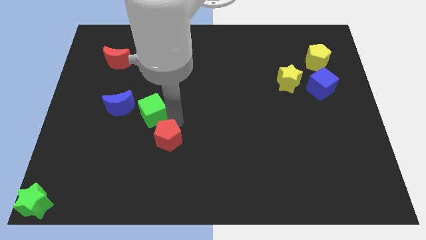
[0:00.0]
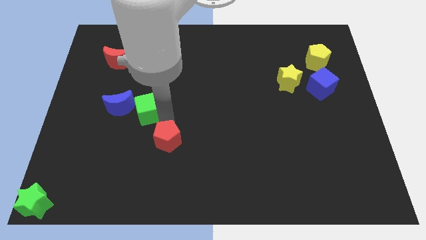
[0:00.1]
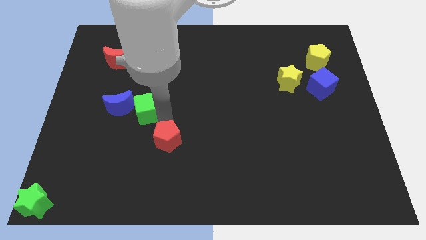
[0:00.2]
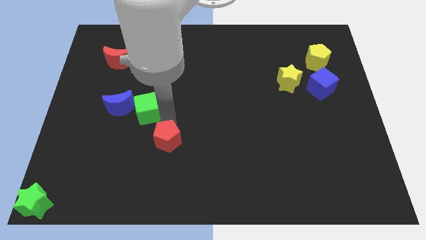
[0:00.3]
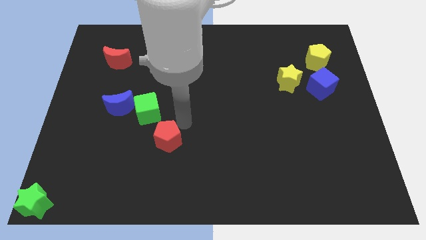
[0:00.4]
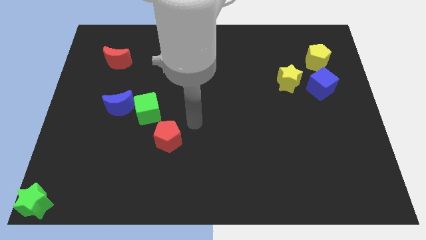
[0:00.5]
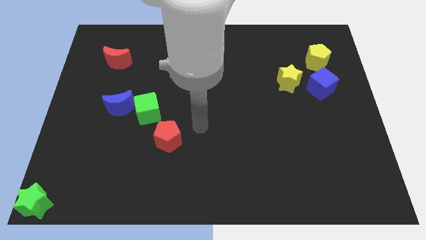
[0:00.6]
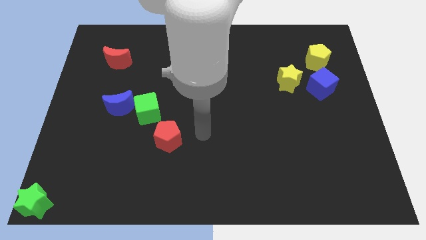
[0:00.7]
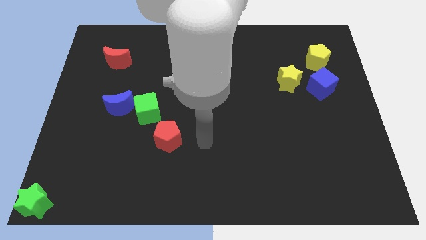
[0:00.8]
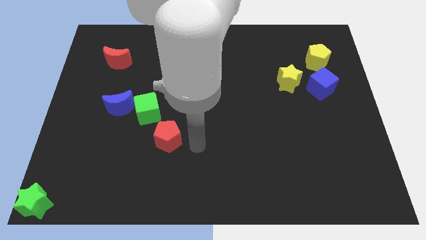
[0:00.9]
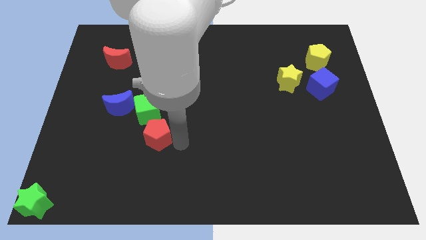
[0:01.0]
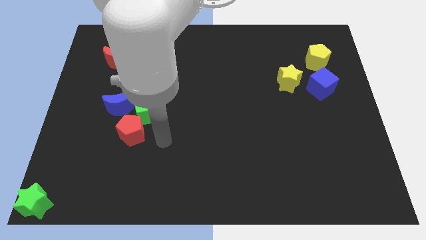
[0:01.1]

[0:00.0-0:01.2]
move the green cube into the blue crescent

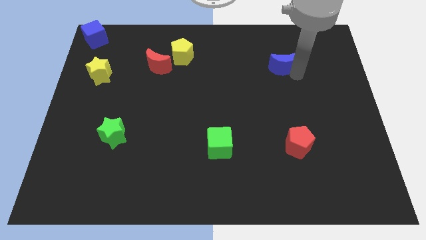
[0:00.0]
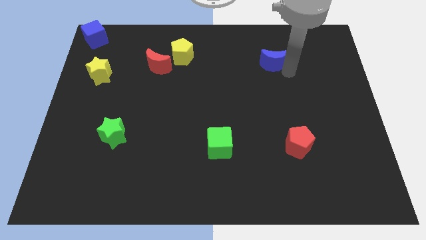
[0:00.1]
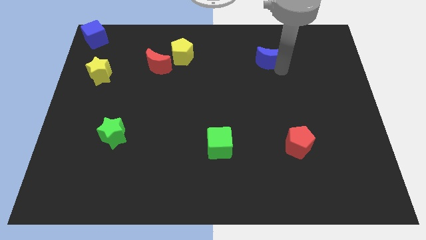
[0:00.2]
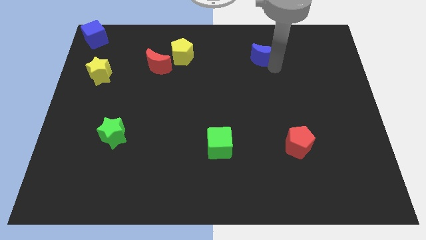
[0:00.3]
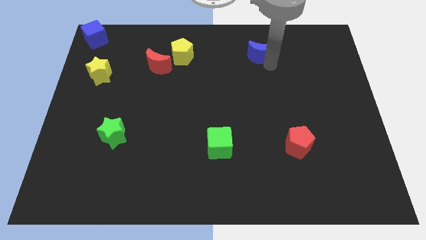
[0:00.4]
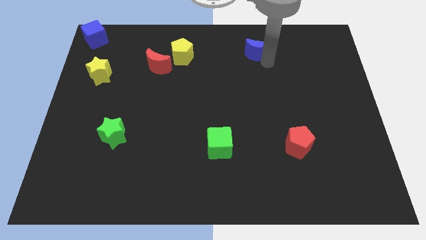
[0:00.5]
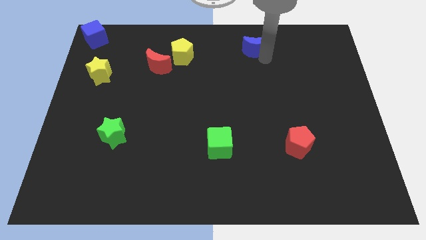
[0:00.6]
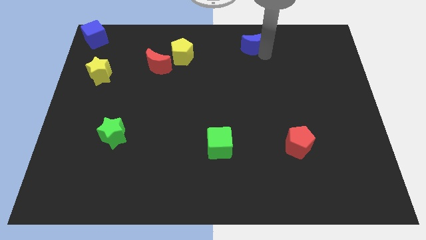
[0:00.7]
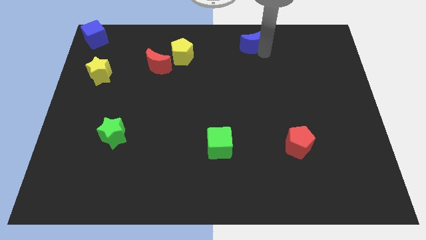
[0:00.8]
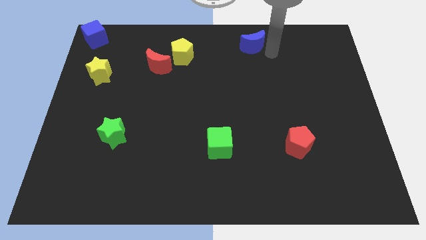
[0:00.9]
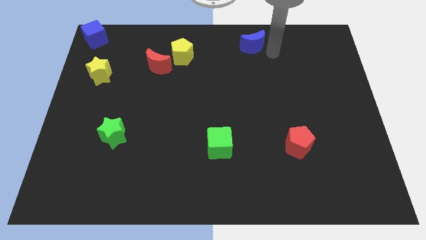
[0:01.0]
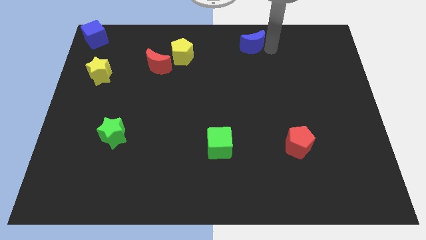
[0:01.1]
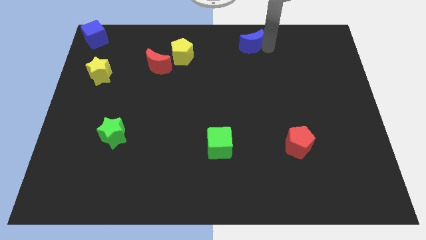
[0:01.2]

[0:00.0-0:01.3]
push the blue moon to the top of the board

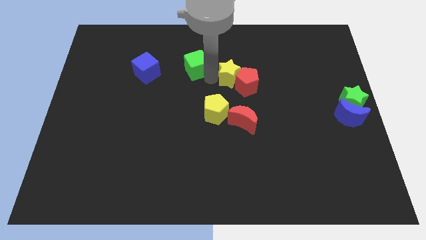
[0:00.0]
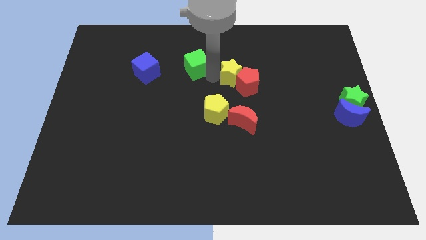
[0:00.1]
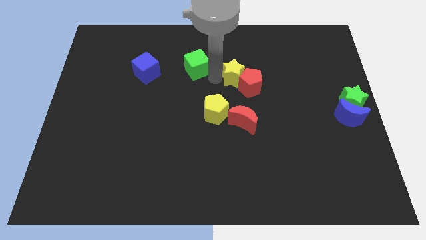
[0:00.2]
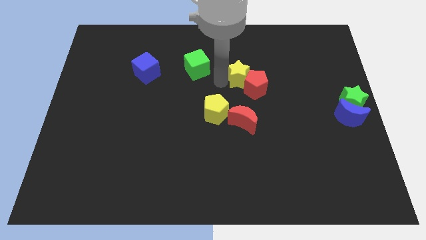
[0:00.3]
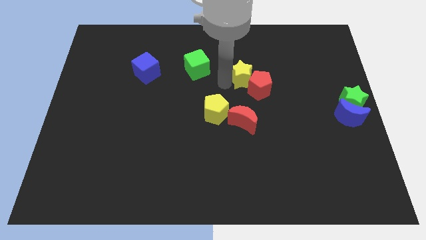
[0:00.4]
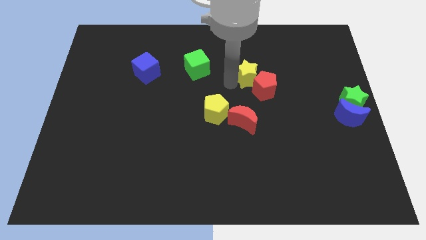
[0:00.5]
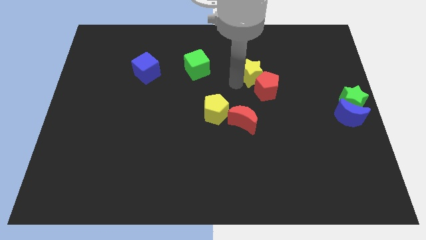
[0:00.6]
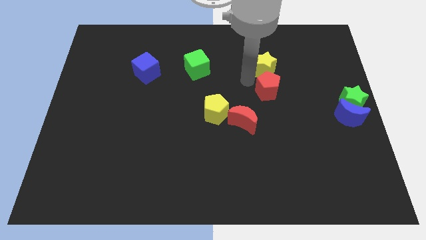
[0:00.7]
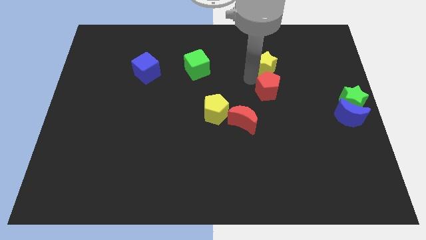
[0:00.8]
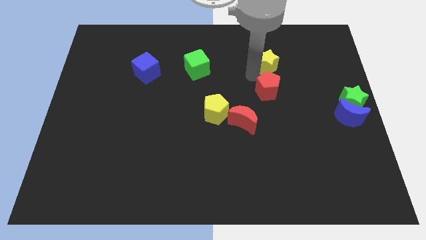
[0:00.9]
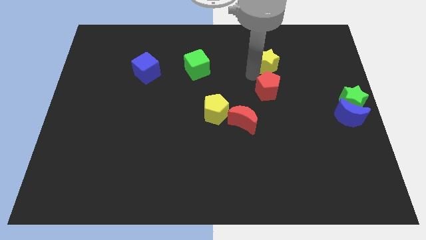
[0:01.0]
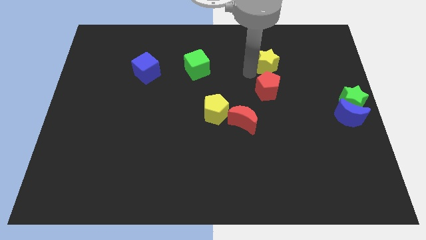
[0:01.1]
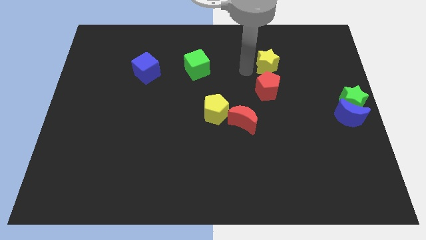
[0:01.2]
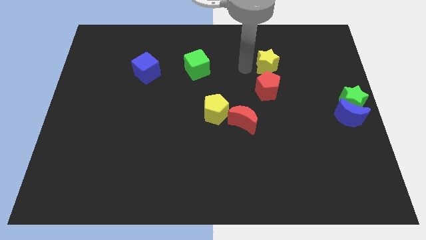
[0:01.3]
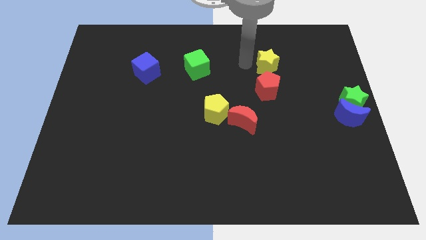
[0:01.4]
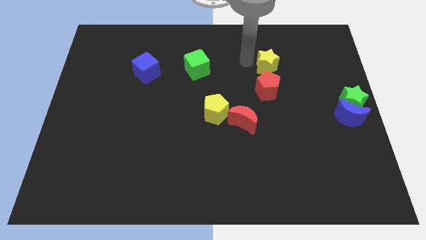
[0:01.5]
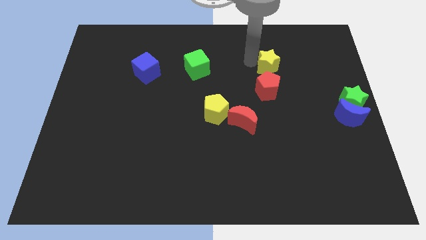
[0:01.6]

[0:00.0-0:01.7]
adjust the yellow star vertically above the red pentagon

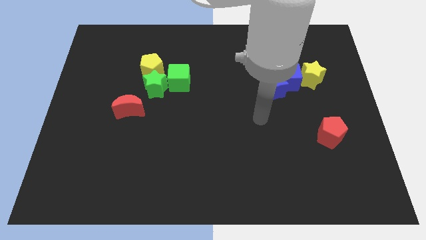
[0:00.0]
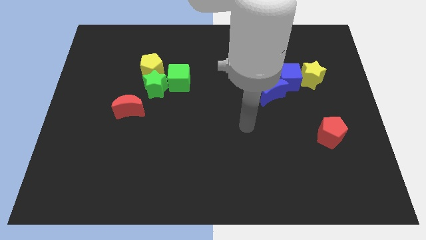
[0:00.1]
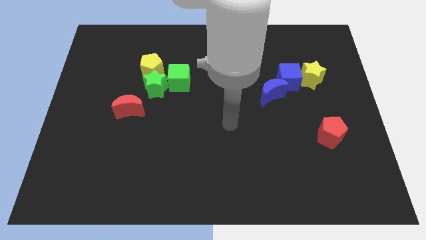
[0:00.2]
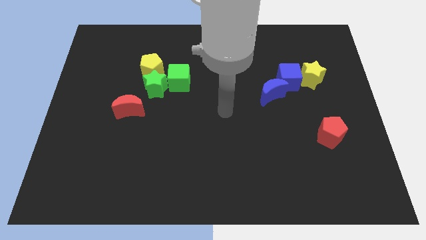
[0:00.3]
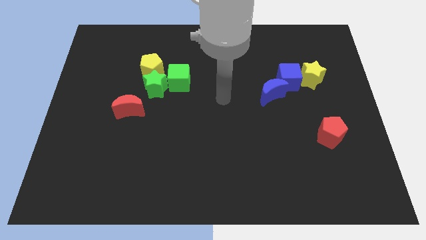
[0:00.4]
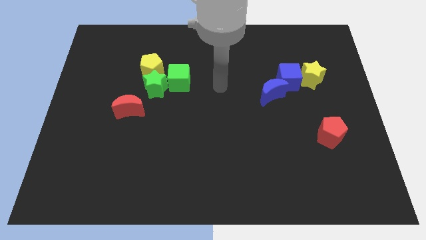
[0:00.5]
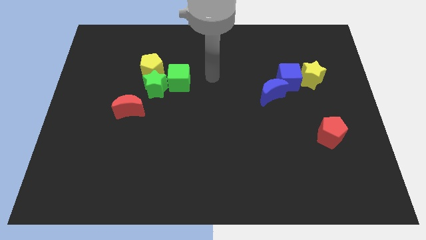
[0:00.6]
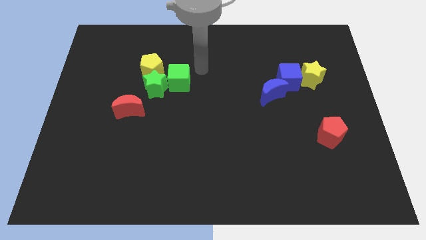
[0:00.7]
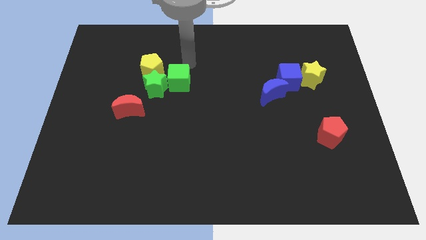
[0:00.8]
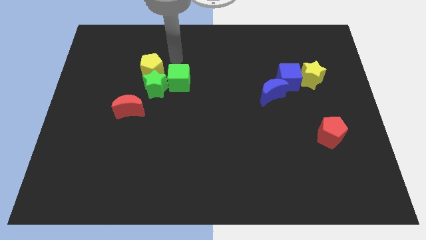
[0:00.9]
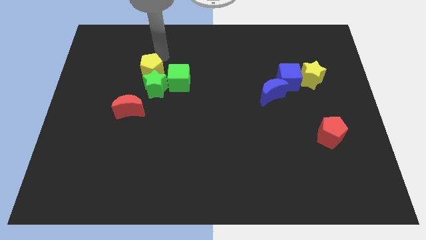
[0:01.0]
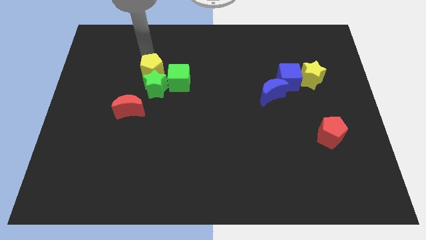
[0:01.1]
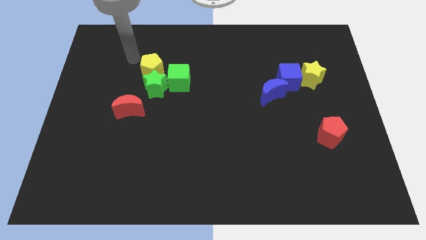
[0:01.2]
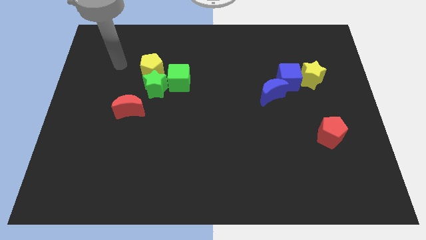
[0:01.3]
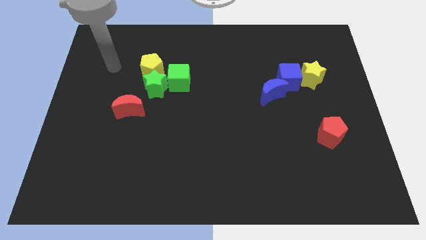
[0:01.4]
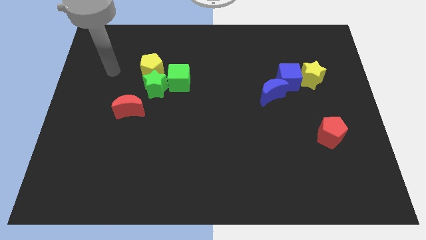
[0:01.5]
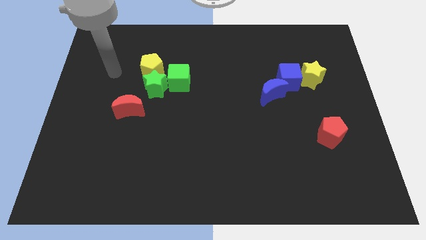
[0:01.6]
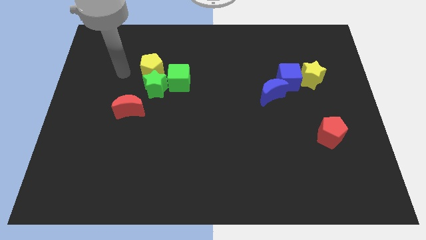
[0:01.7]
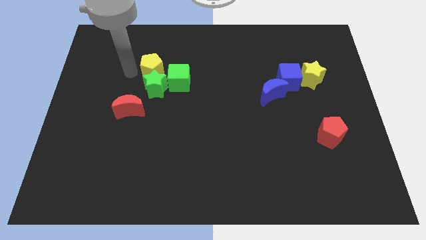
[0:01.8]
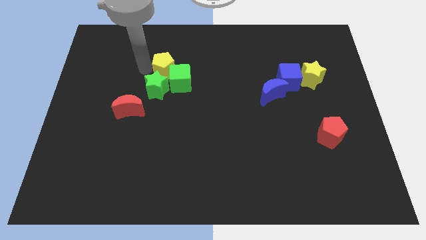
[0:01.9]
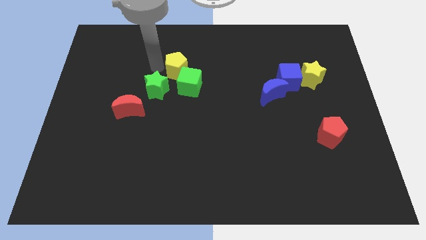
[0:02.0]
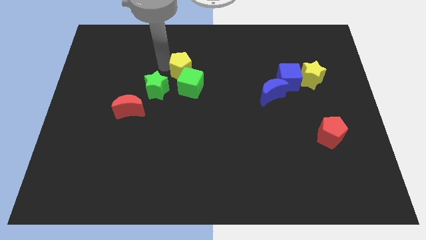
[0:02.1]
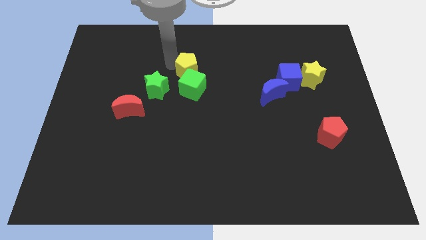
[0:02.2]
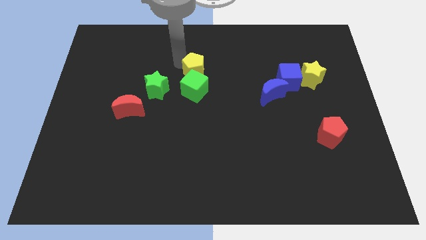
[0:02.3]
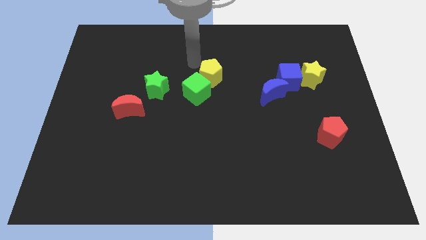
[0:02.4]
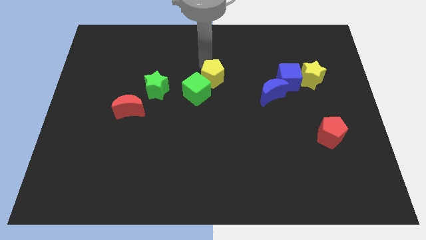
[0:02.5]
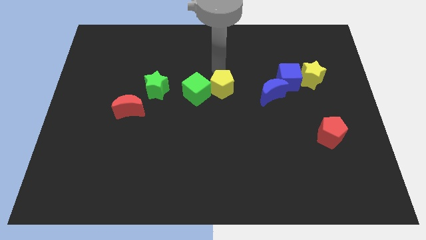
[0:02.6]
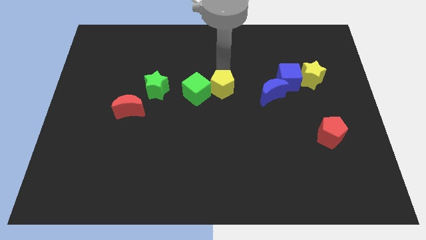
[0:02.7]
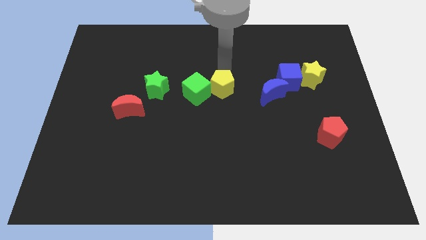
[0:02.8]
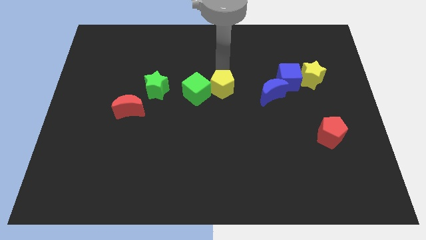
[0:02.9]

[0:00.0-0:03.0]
push the yellow pentagon and green cube towards the center of the board

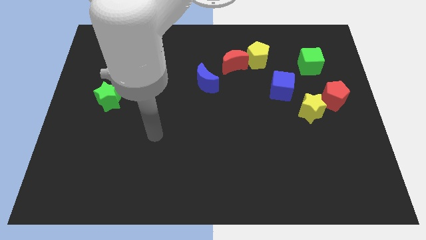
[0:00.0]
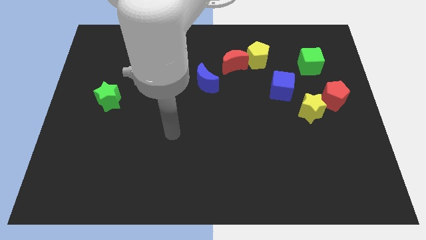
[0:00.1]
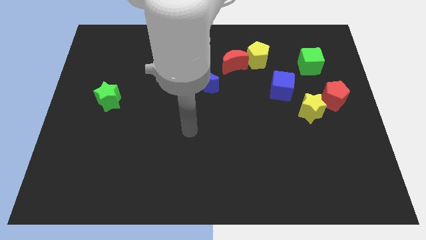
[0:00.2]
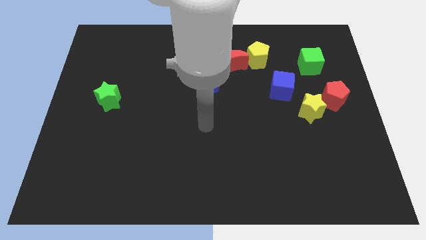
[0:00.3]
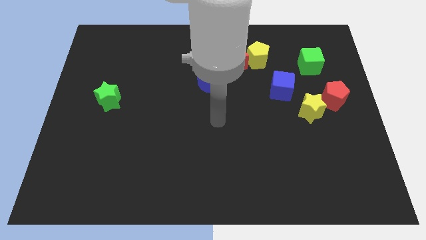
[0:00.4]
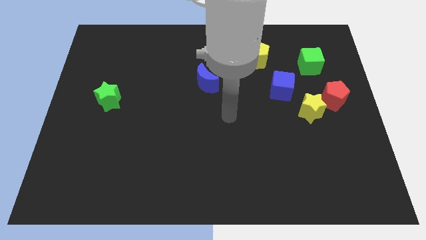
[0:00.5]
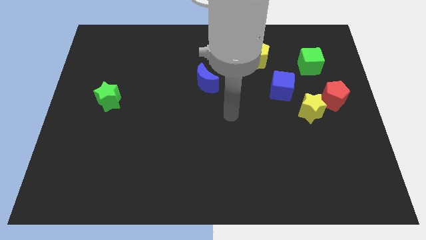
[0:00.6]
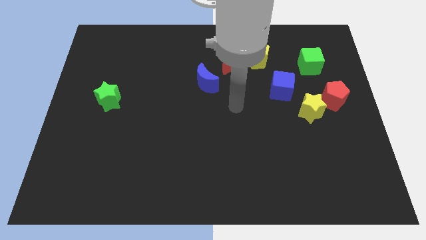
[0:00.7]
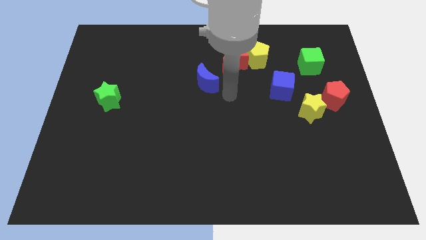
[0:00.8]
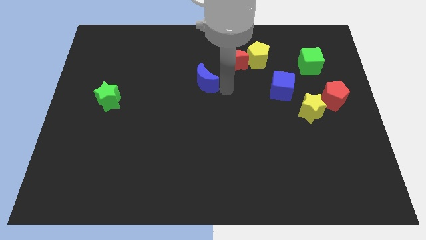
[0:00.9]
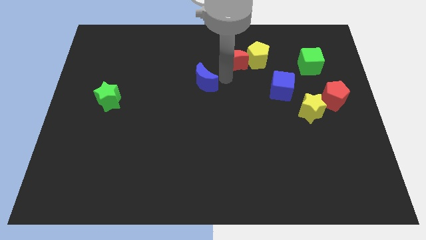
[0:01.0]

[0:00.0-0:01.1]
move your hand to the right of blue moon

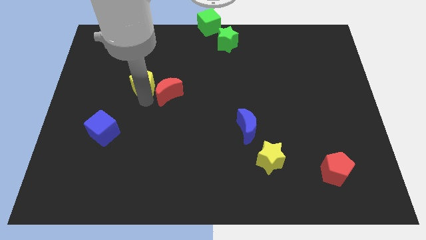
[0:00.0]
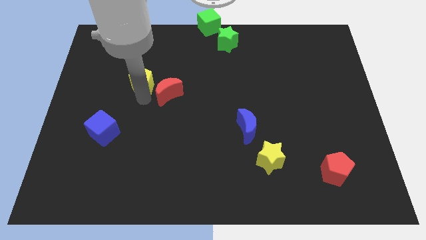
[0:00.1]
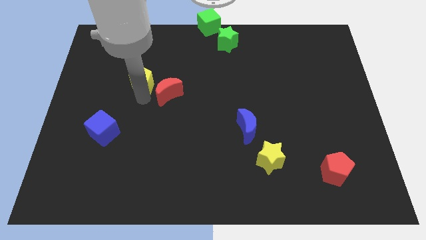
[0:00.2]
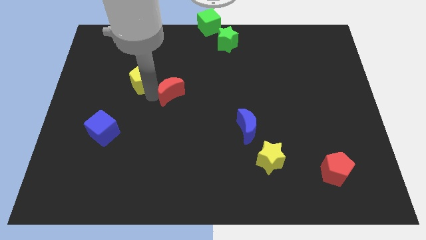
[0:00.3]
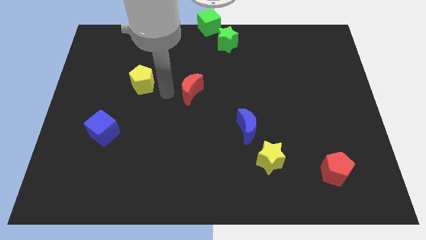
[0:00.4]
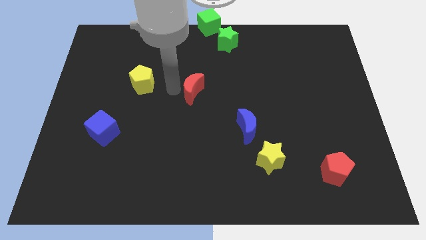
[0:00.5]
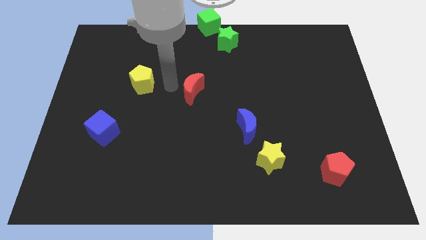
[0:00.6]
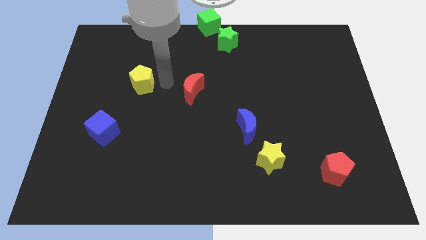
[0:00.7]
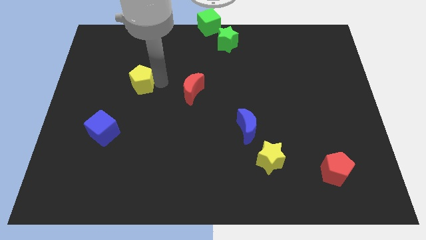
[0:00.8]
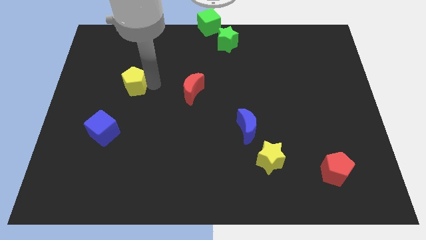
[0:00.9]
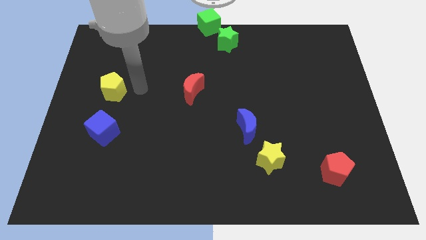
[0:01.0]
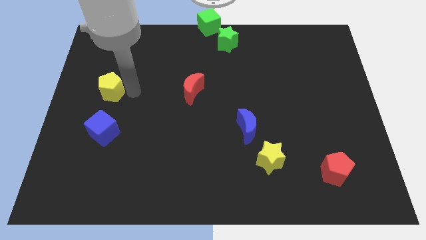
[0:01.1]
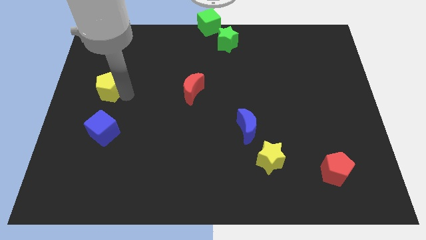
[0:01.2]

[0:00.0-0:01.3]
separate red moon from yellow pentagon
